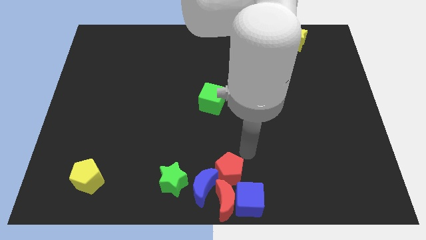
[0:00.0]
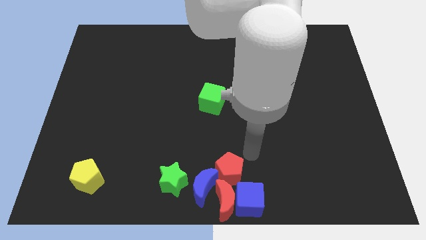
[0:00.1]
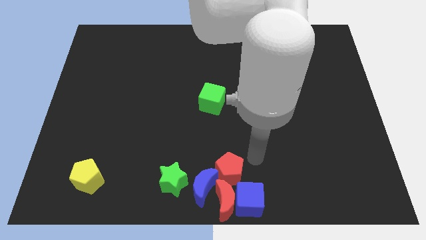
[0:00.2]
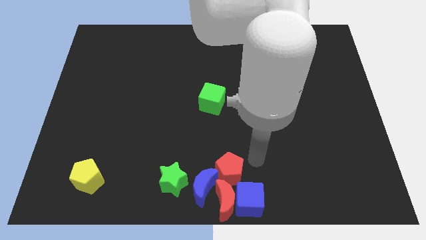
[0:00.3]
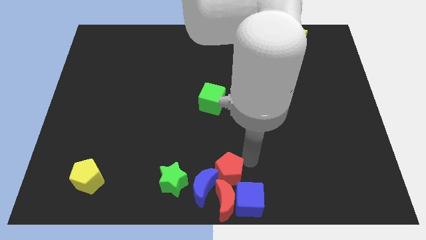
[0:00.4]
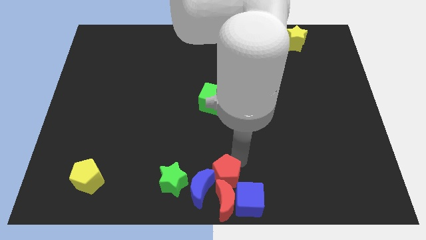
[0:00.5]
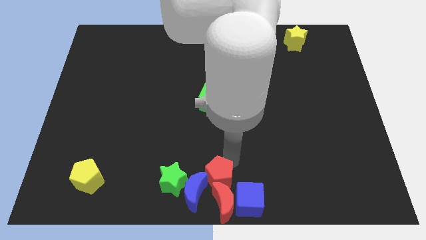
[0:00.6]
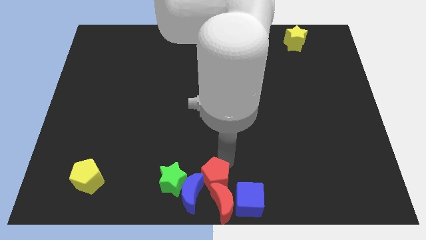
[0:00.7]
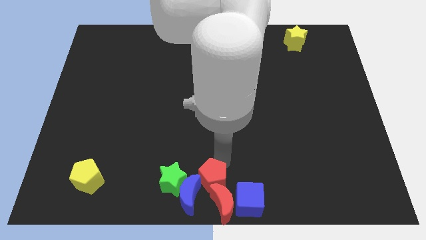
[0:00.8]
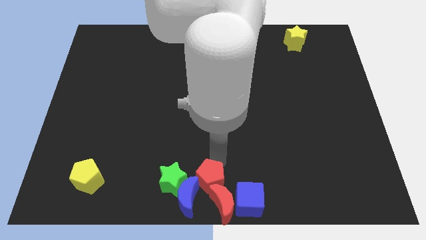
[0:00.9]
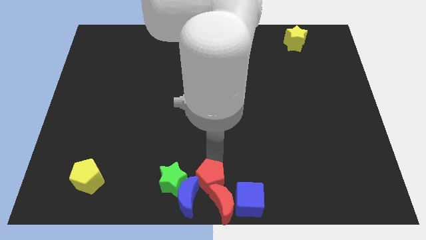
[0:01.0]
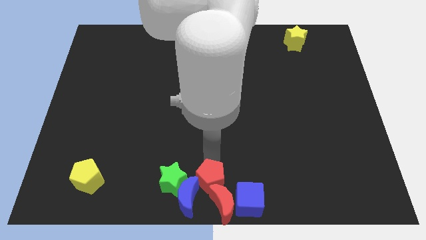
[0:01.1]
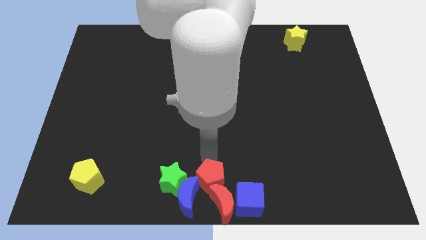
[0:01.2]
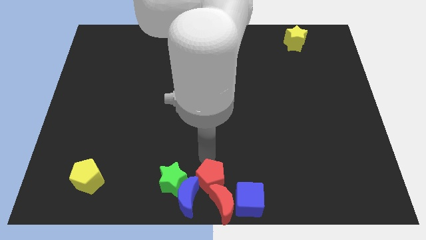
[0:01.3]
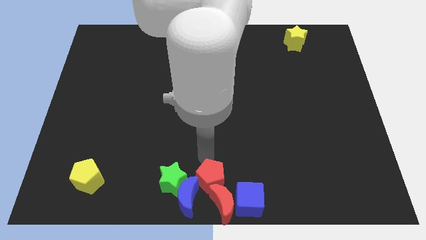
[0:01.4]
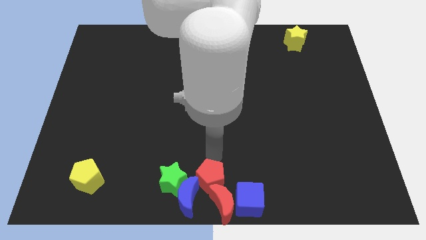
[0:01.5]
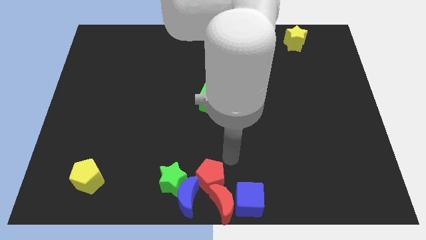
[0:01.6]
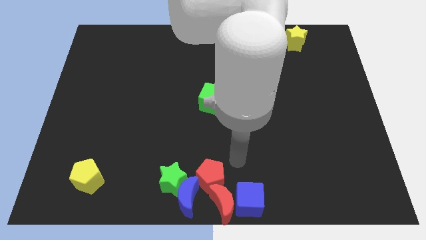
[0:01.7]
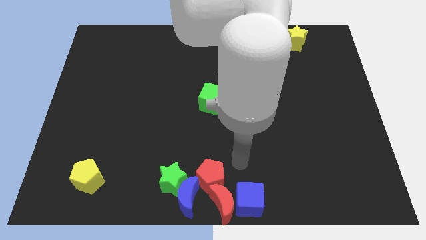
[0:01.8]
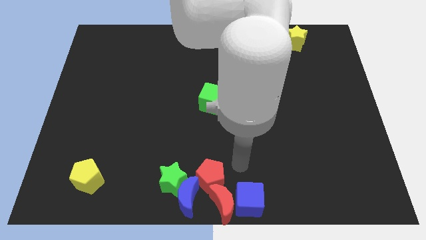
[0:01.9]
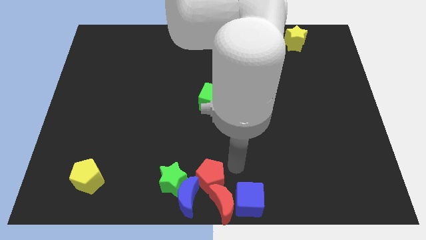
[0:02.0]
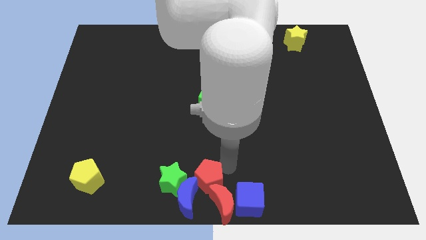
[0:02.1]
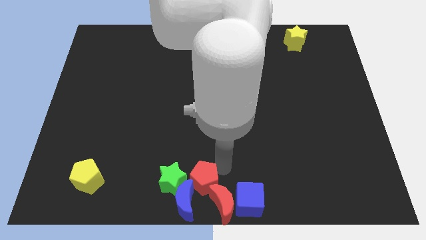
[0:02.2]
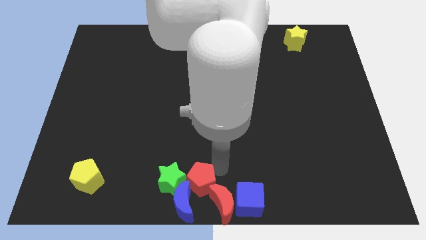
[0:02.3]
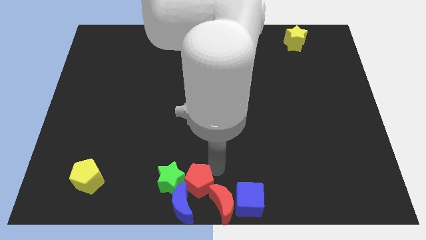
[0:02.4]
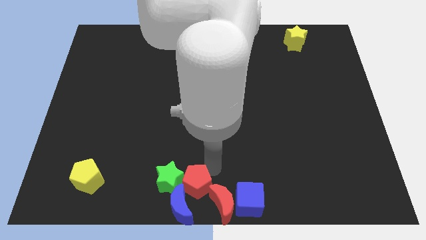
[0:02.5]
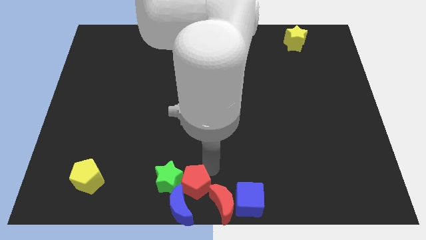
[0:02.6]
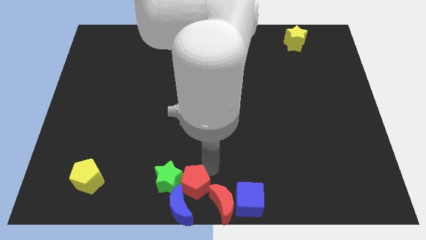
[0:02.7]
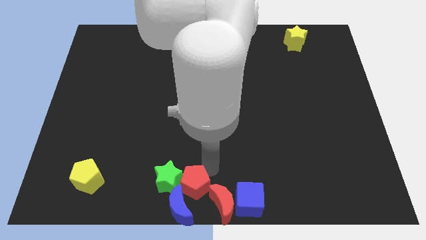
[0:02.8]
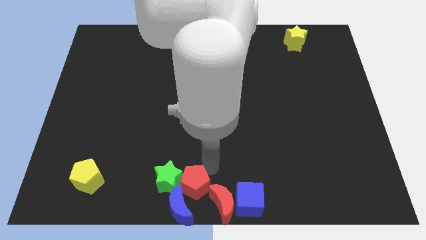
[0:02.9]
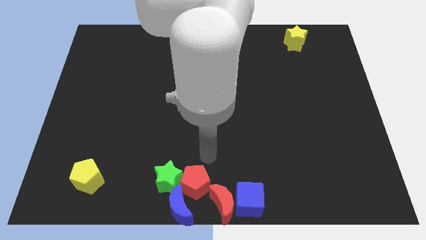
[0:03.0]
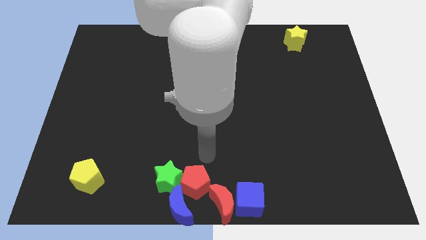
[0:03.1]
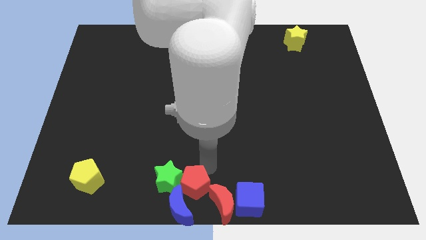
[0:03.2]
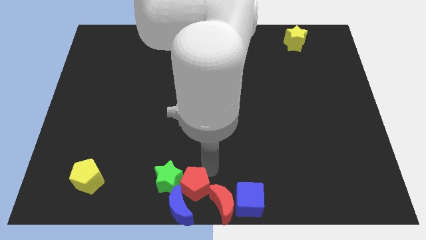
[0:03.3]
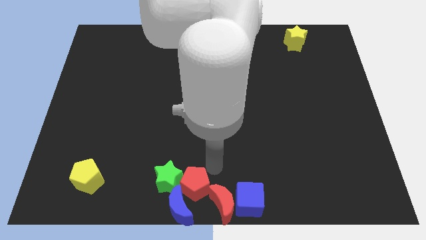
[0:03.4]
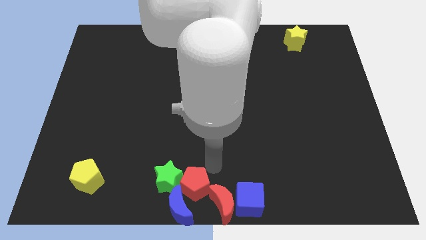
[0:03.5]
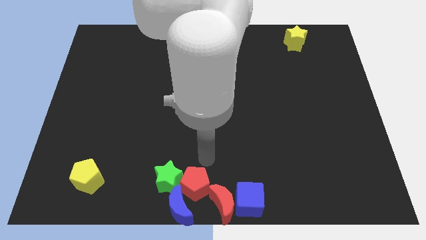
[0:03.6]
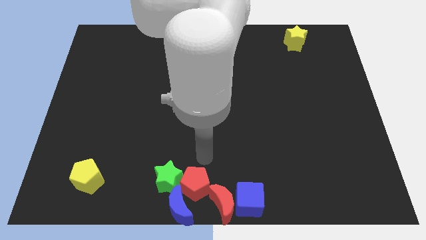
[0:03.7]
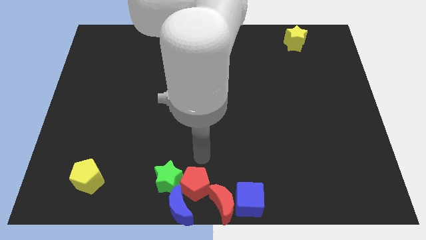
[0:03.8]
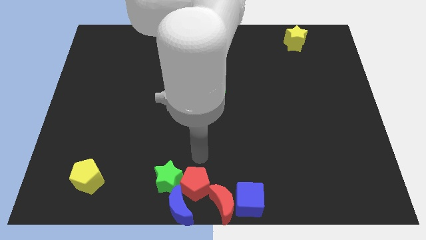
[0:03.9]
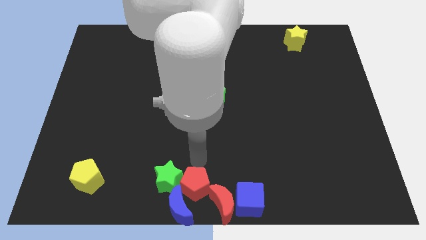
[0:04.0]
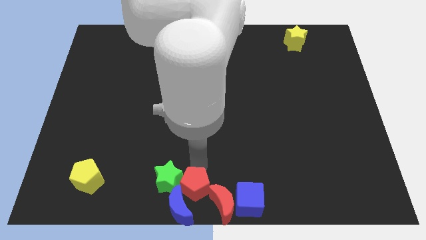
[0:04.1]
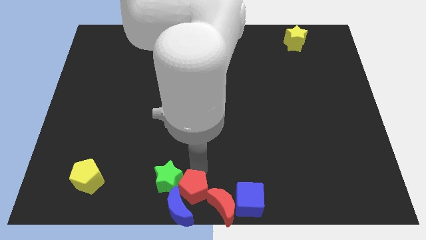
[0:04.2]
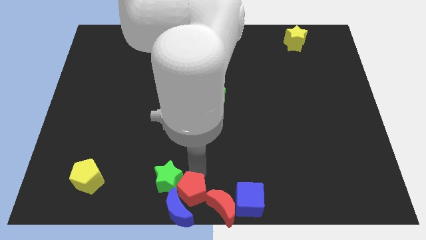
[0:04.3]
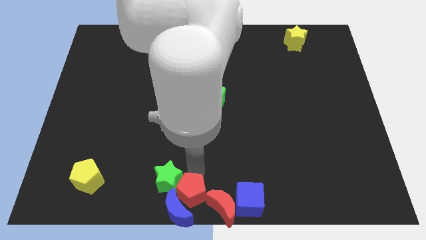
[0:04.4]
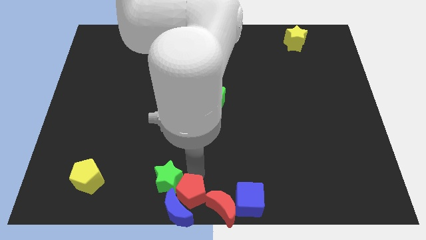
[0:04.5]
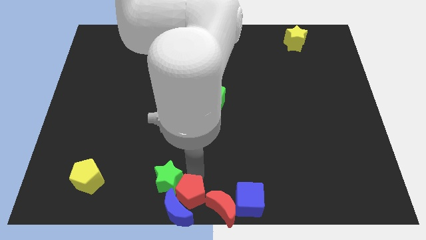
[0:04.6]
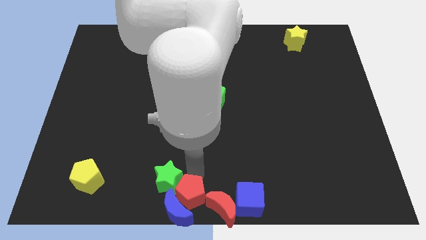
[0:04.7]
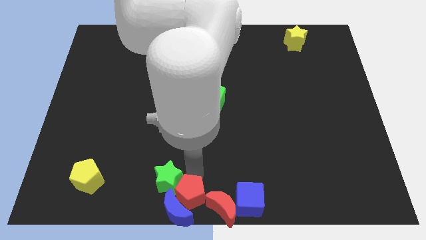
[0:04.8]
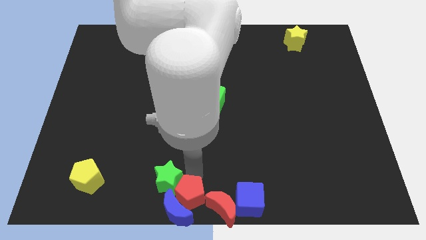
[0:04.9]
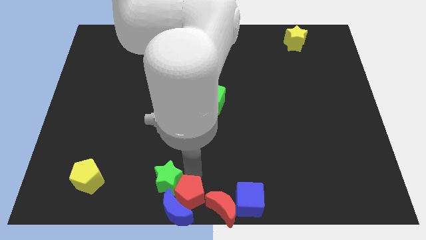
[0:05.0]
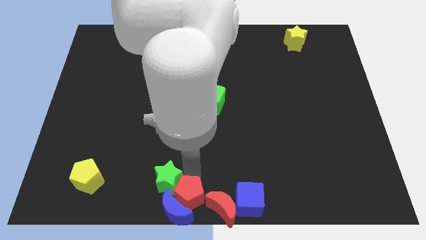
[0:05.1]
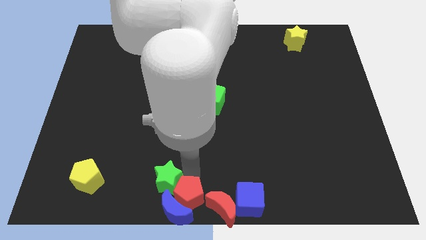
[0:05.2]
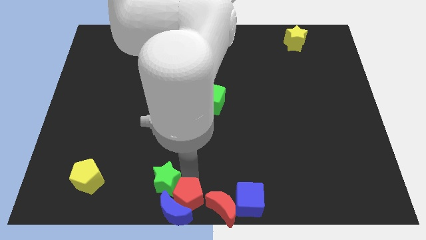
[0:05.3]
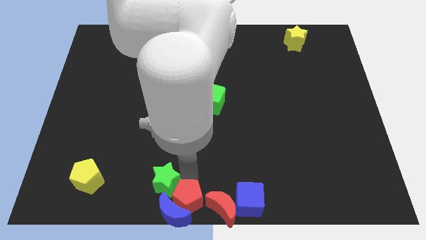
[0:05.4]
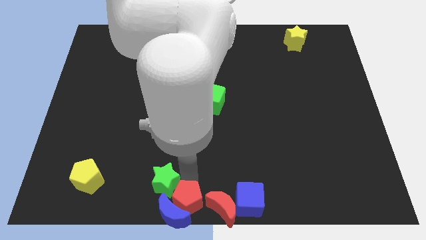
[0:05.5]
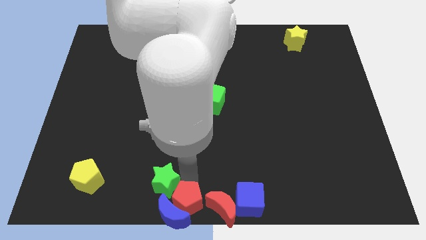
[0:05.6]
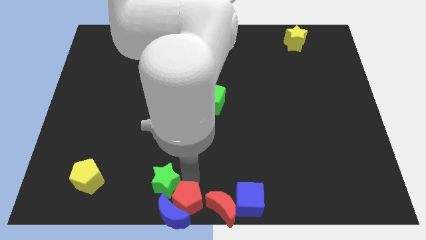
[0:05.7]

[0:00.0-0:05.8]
adjust the group of blocks at the bottom center odf the table

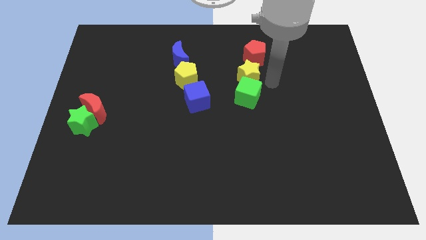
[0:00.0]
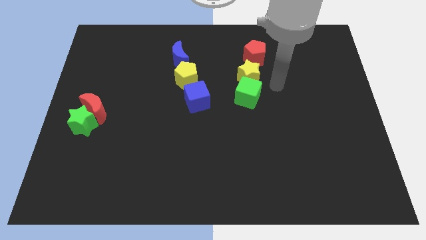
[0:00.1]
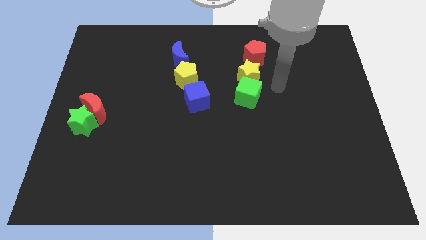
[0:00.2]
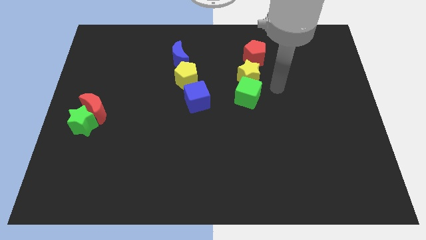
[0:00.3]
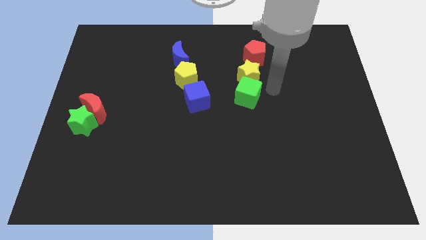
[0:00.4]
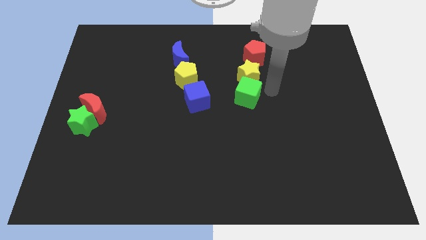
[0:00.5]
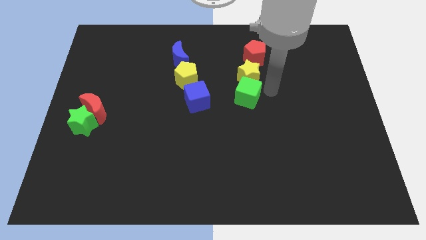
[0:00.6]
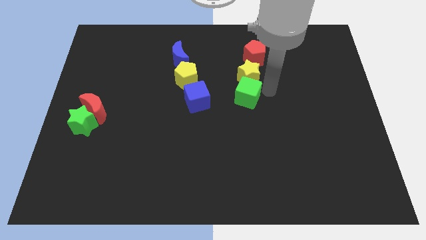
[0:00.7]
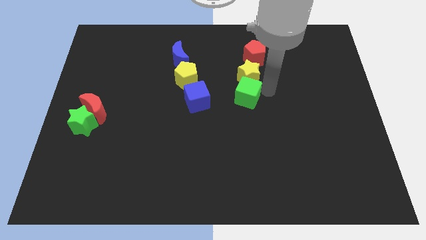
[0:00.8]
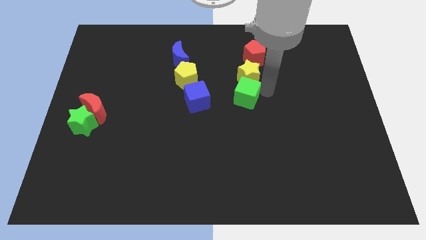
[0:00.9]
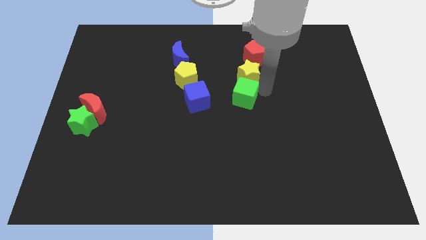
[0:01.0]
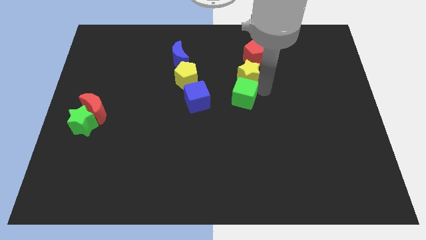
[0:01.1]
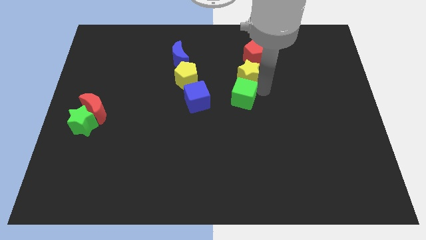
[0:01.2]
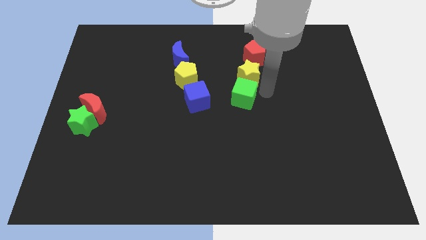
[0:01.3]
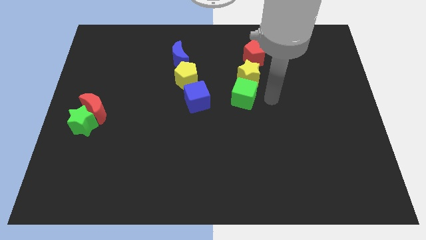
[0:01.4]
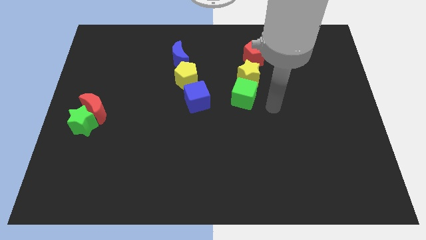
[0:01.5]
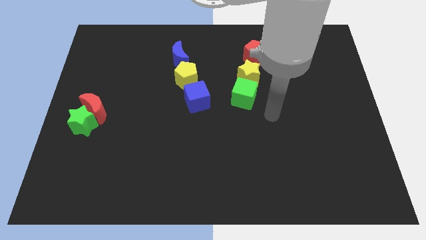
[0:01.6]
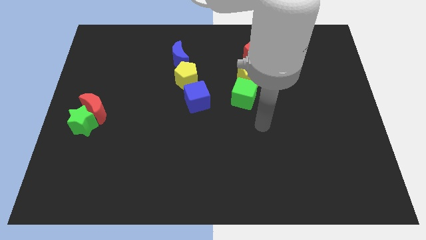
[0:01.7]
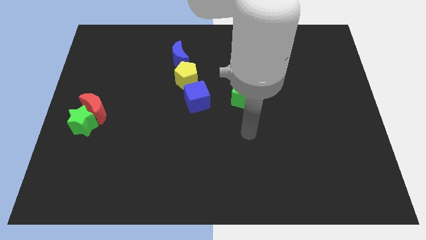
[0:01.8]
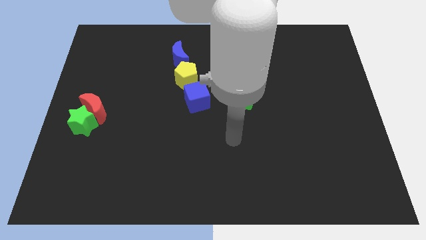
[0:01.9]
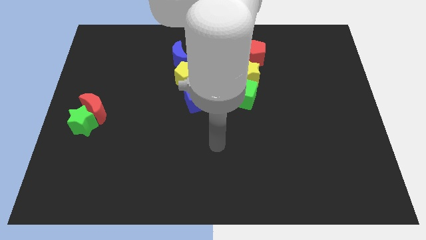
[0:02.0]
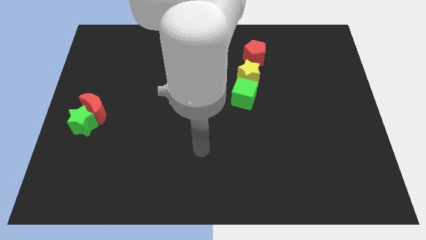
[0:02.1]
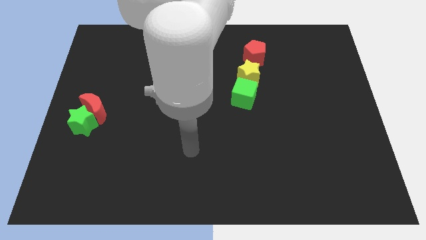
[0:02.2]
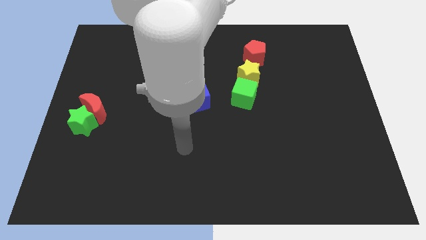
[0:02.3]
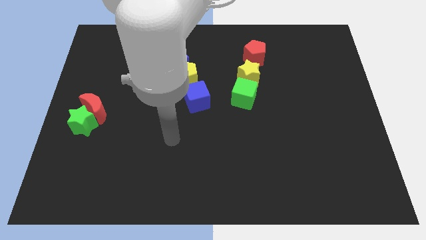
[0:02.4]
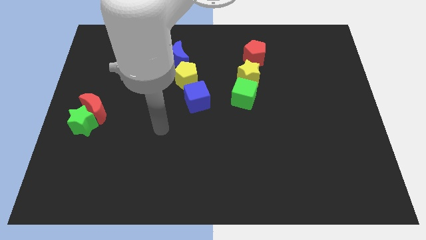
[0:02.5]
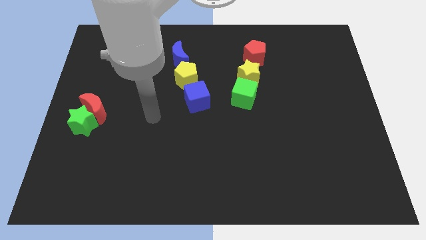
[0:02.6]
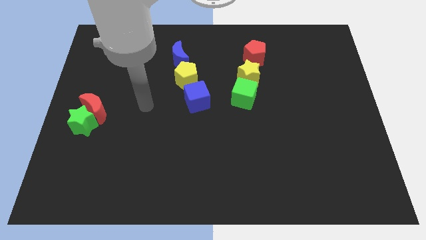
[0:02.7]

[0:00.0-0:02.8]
slightly push the green cube towards the center of board

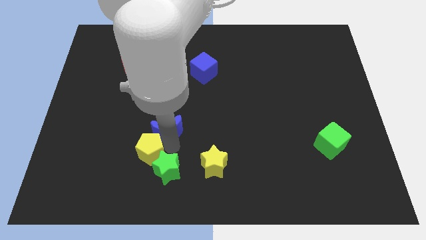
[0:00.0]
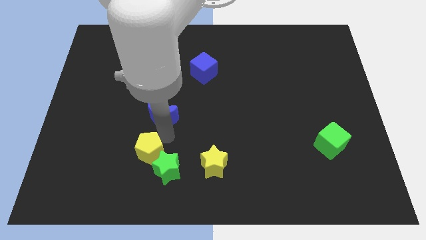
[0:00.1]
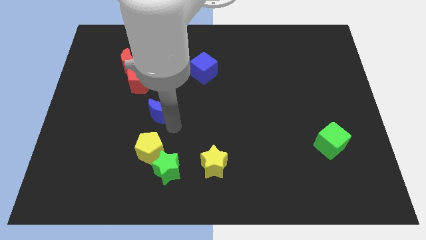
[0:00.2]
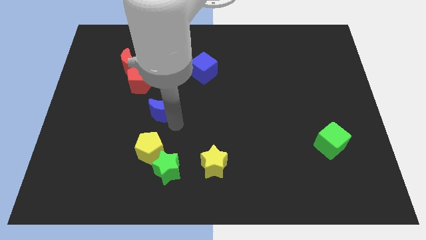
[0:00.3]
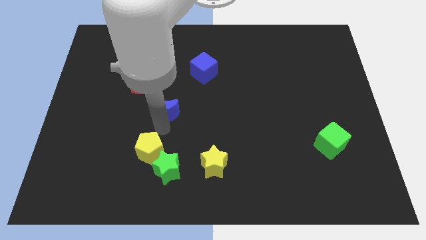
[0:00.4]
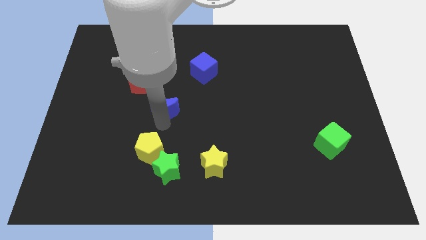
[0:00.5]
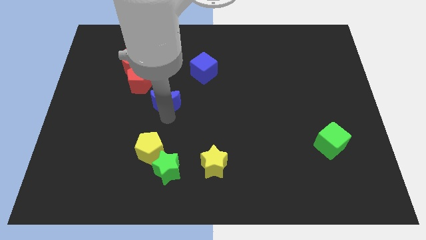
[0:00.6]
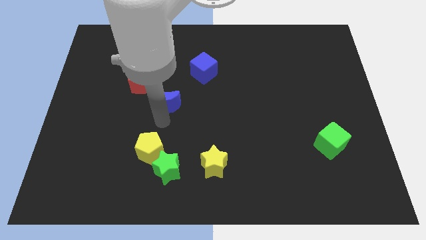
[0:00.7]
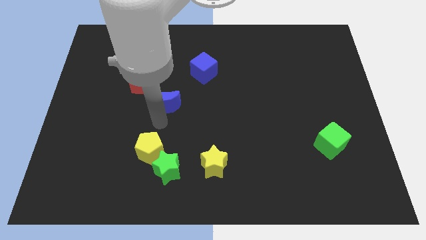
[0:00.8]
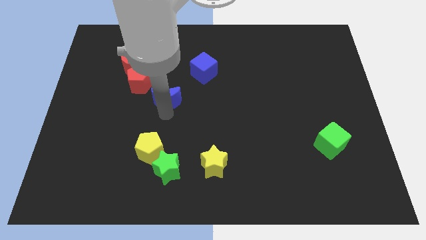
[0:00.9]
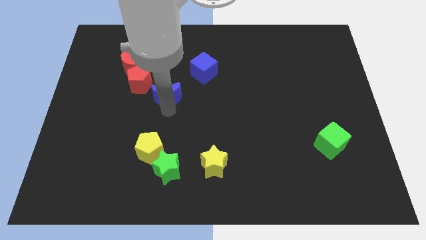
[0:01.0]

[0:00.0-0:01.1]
separate the blue moon from the yellow pentagon
